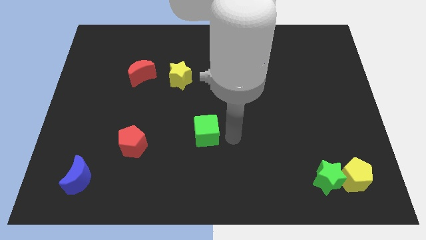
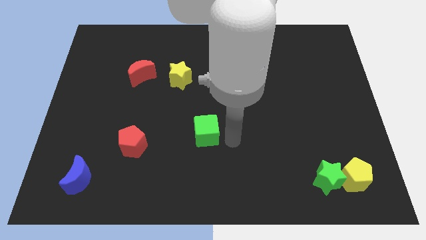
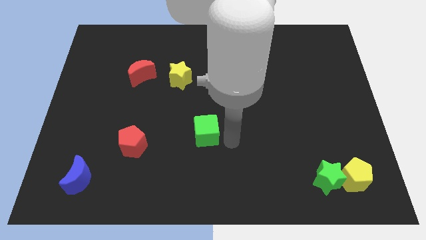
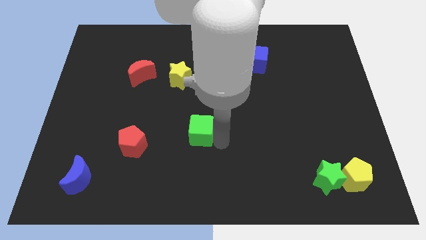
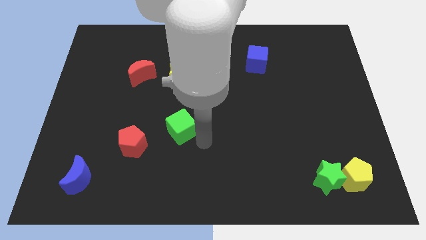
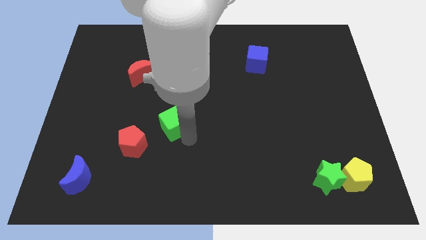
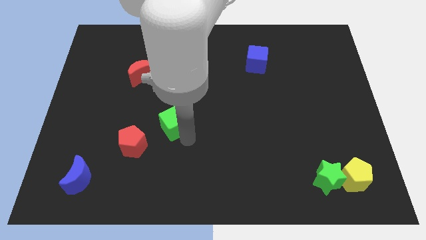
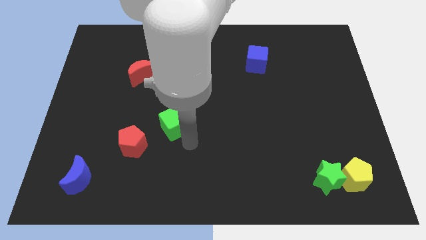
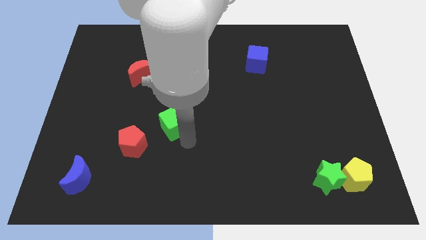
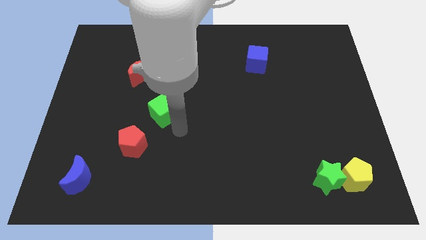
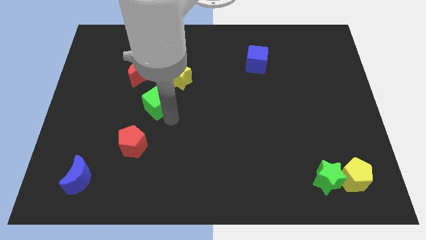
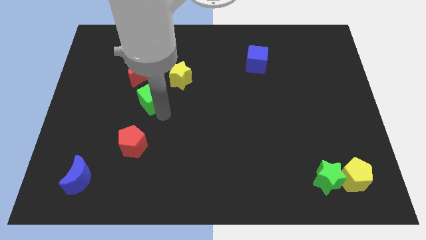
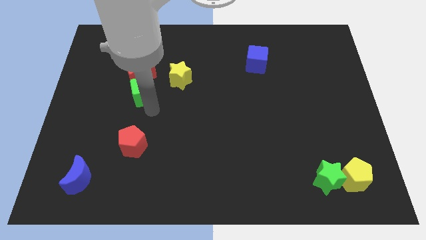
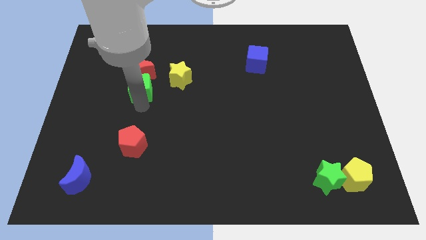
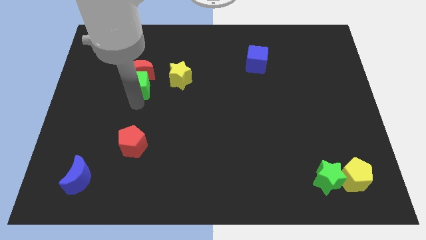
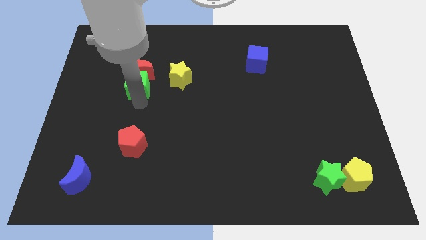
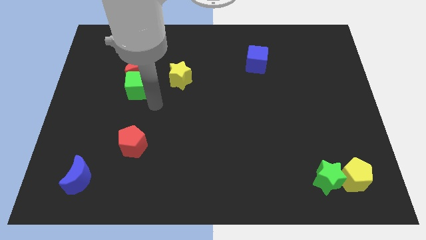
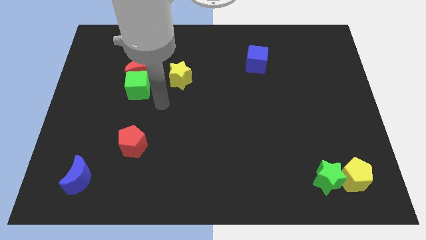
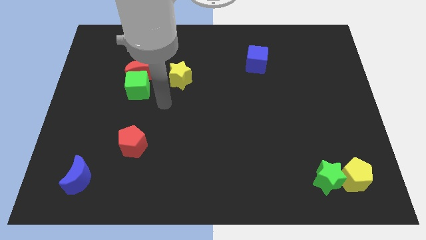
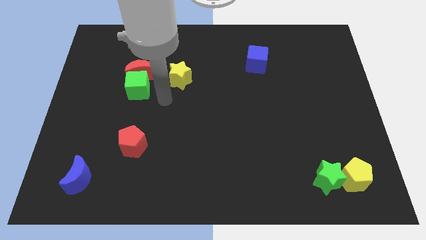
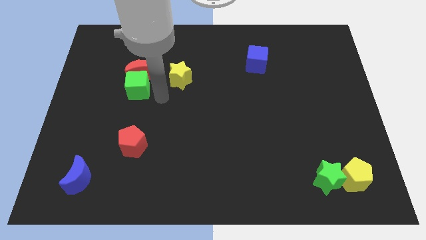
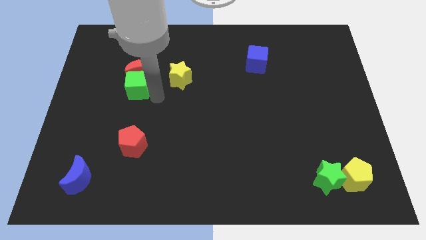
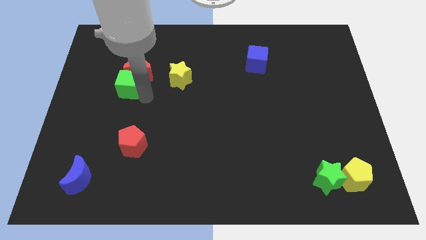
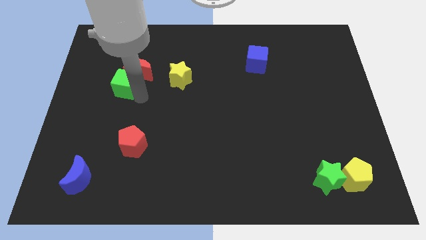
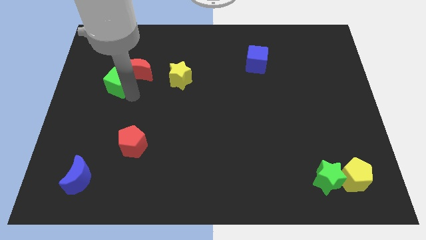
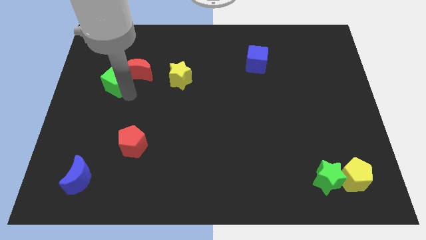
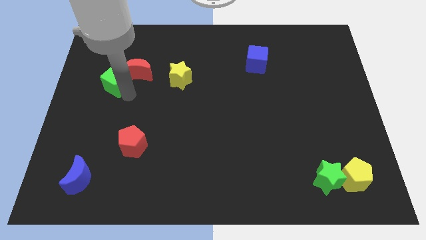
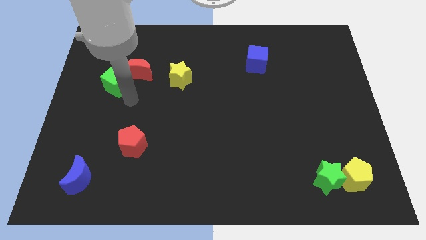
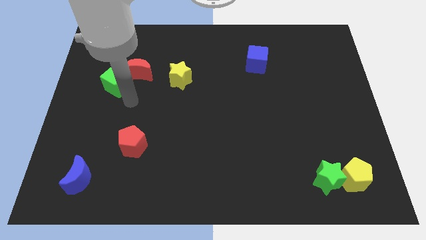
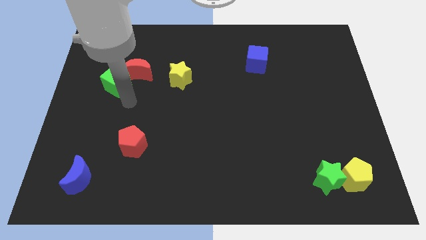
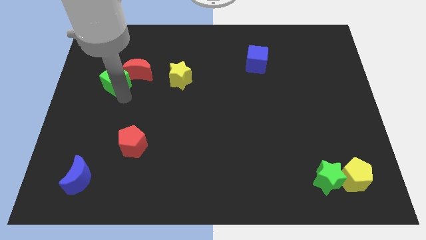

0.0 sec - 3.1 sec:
place the green cube left of red red crescent

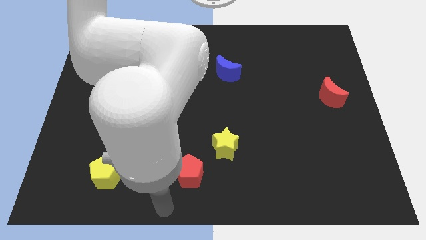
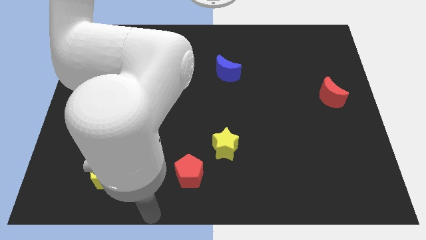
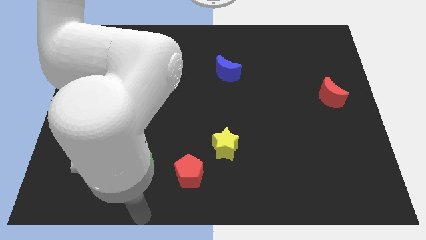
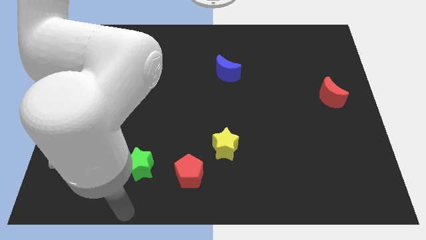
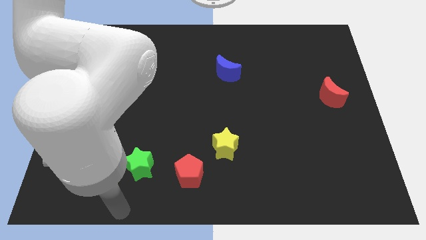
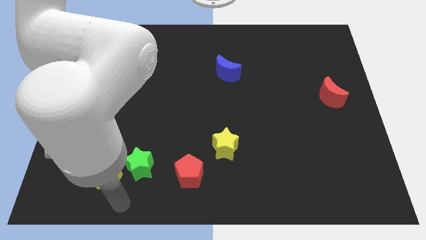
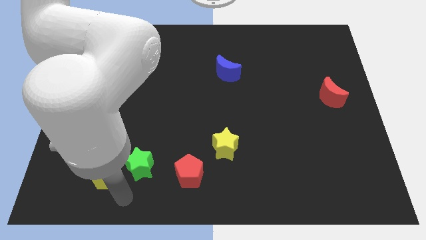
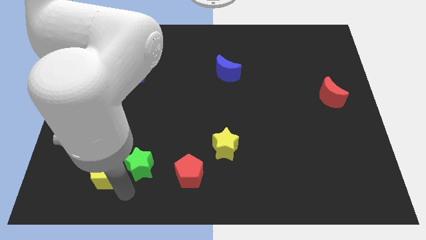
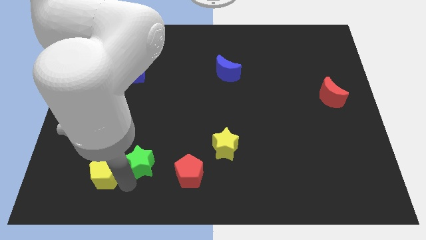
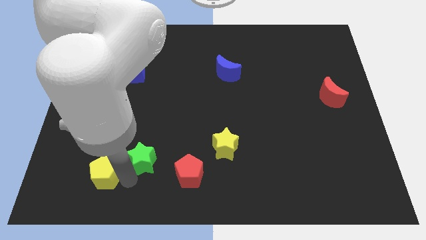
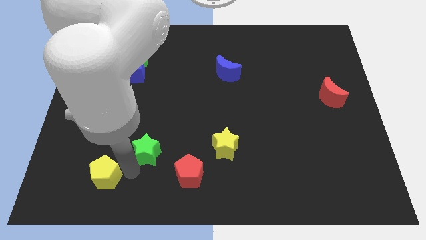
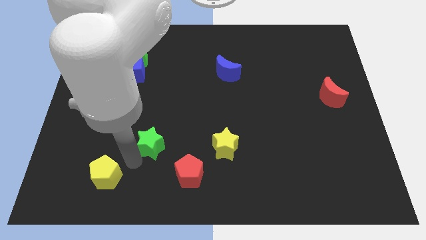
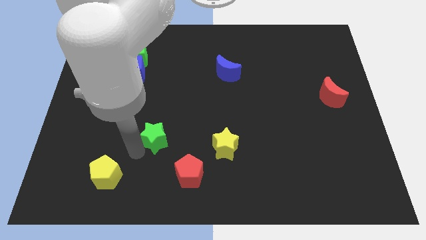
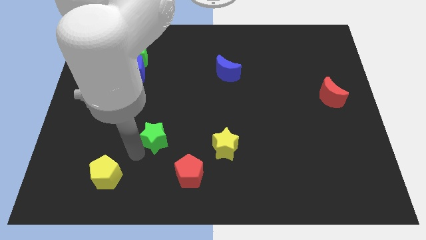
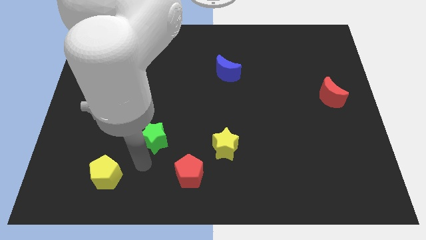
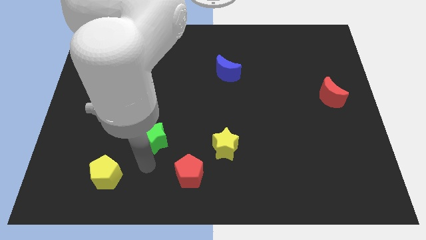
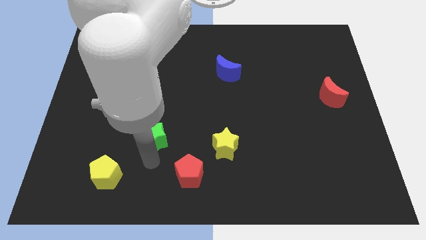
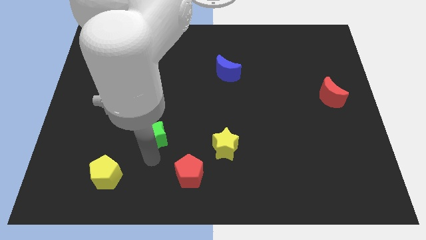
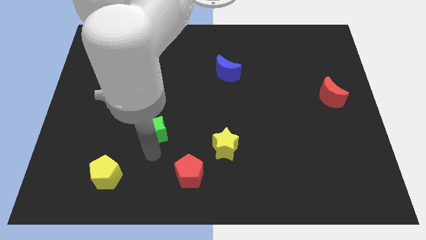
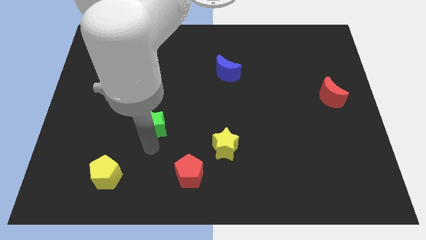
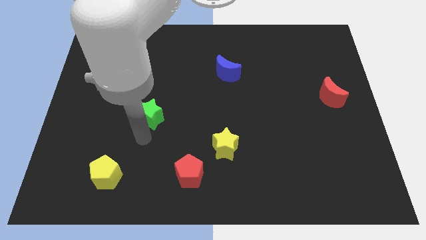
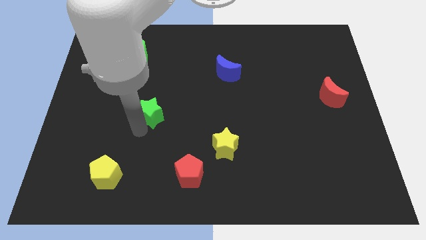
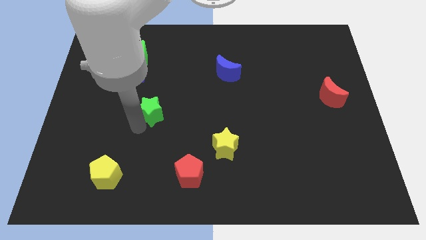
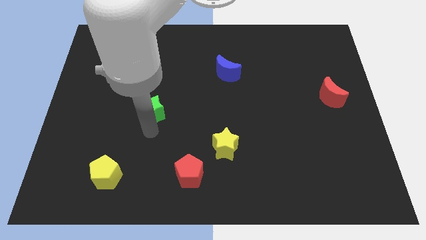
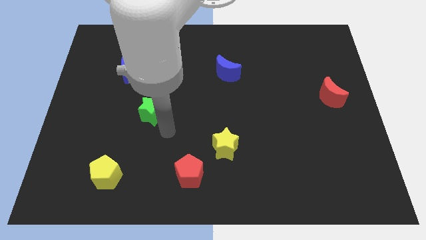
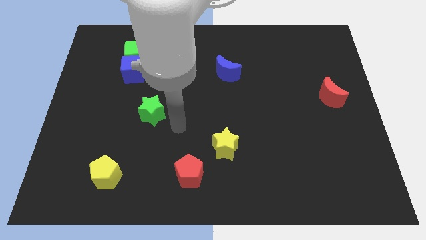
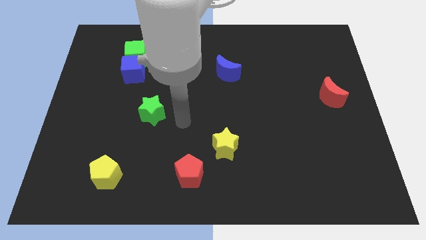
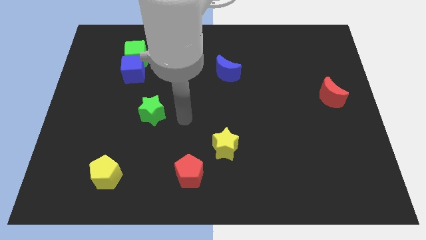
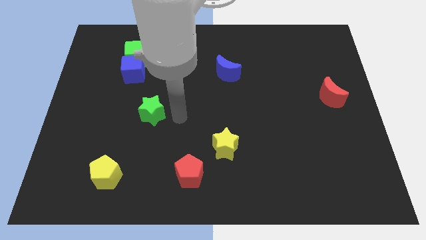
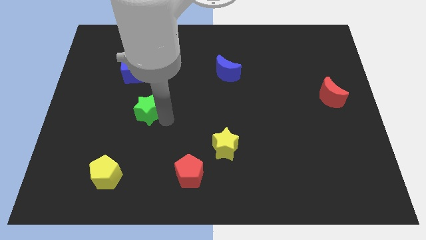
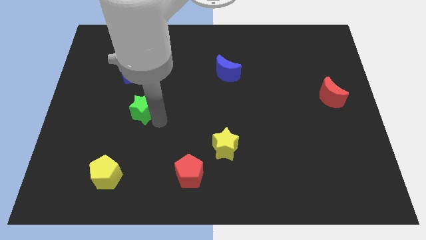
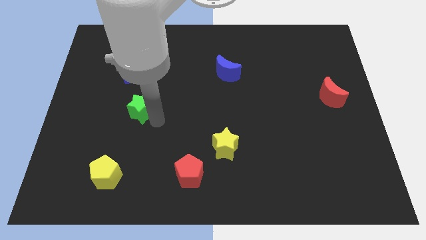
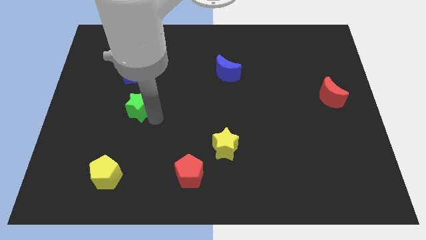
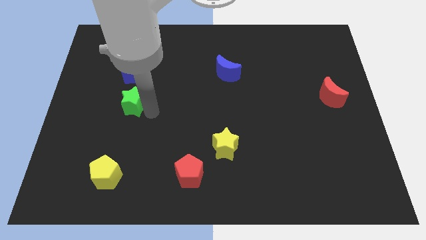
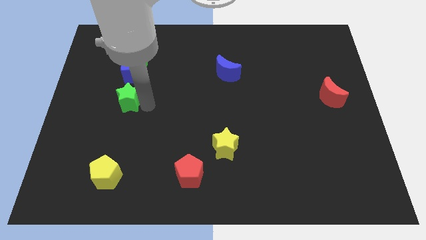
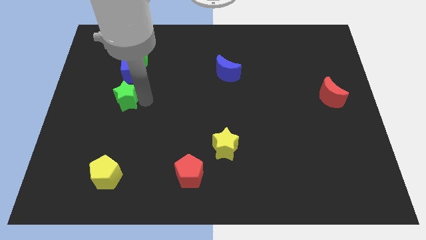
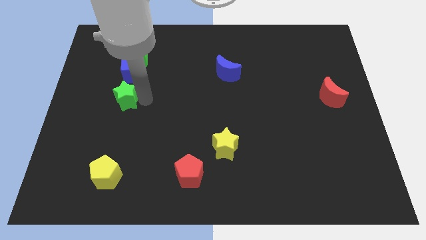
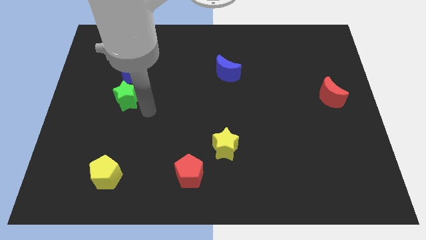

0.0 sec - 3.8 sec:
move the green star towards the blue cube

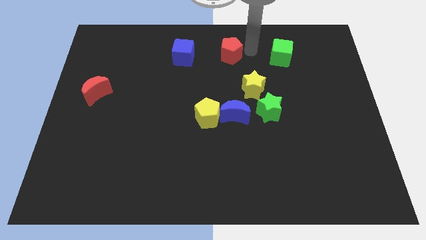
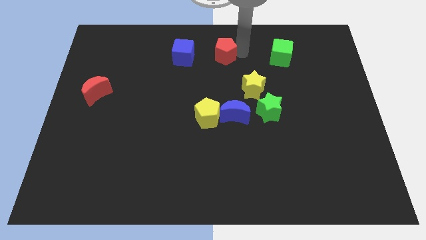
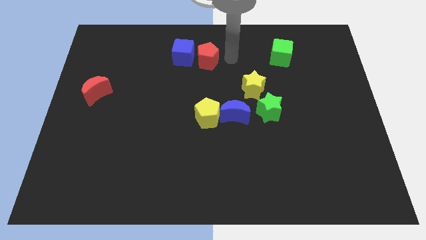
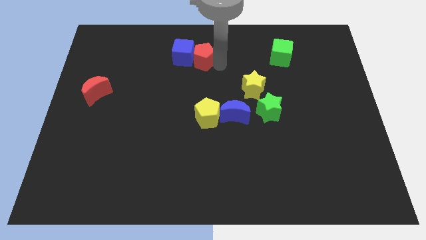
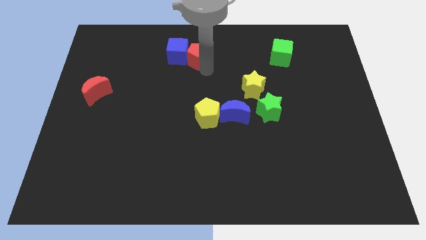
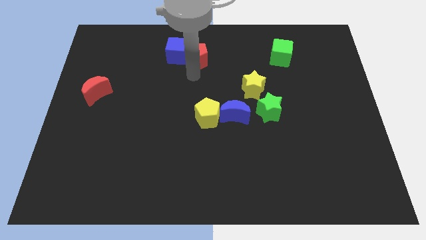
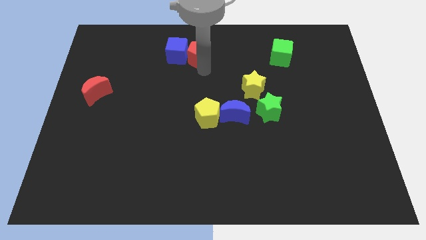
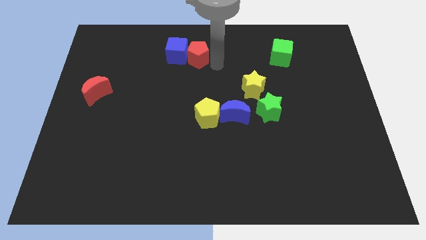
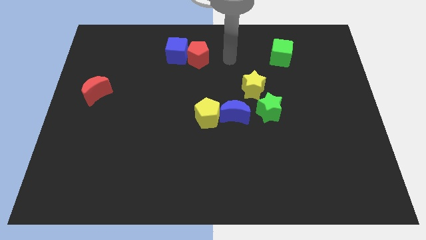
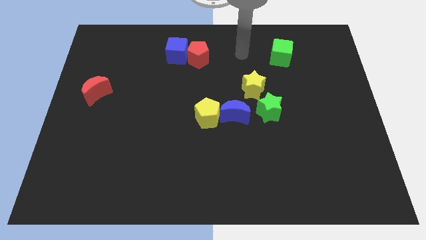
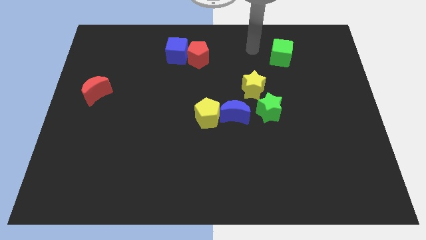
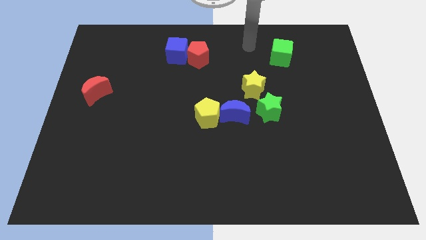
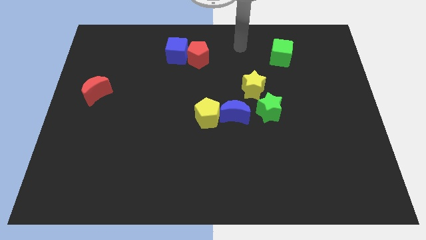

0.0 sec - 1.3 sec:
move the red pentagon to the blue cube

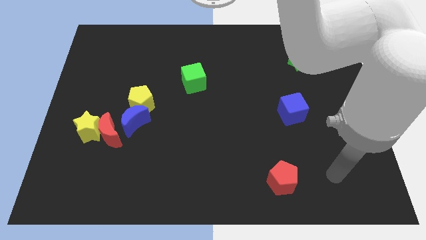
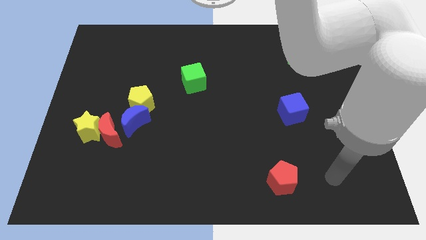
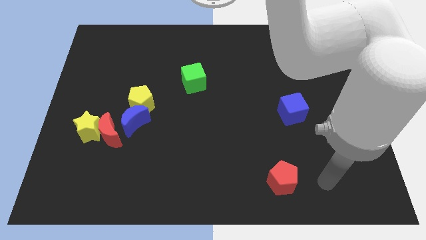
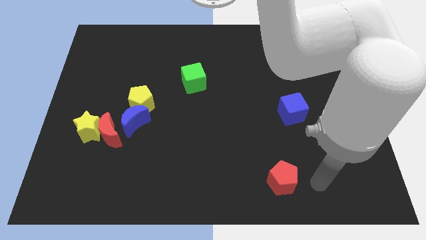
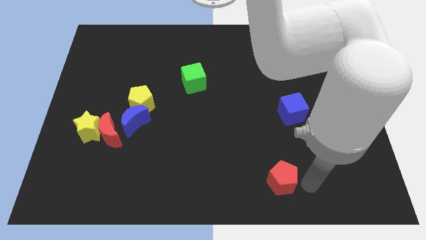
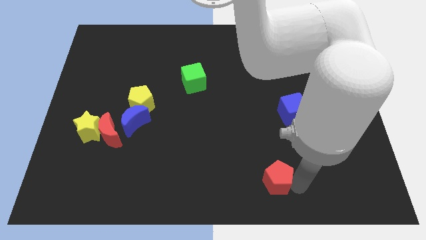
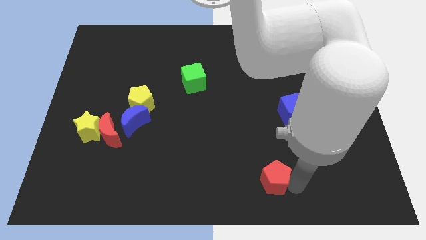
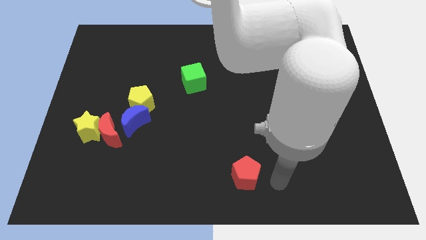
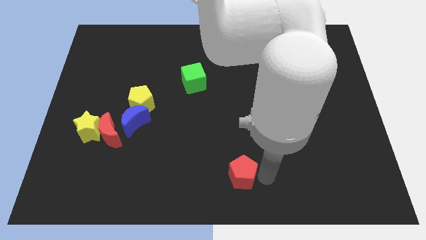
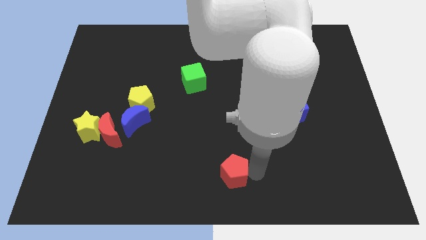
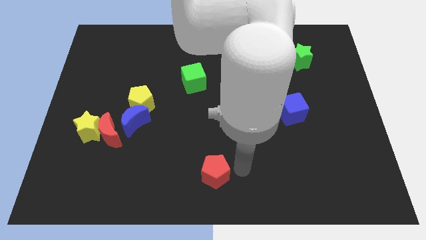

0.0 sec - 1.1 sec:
slide the red pentagon towards the left side of the board
